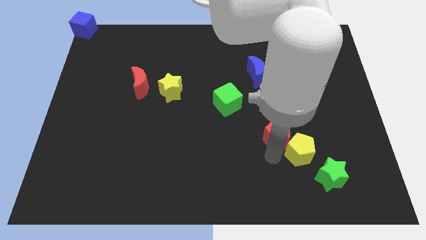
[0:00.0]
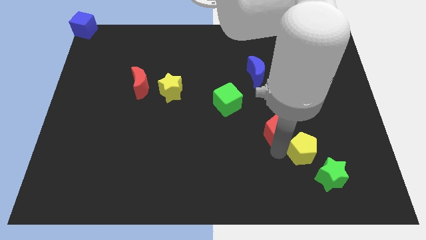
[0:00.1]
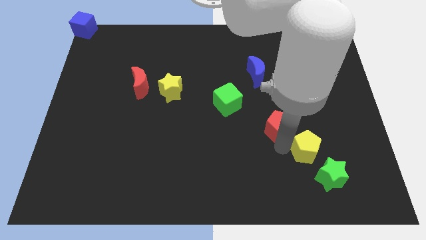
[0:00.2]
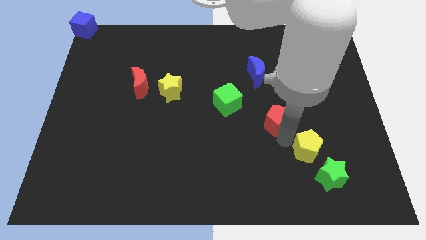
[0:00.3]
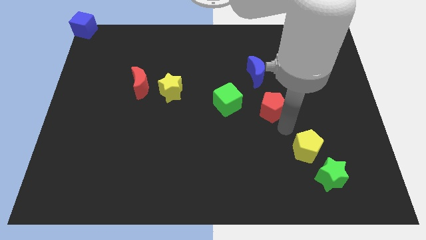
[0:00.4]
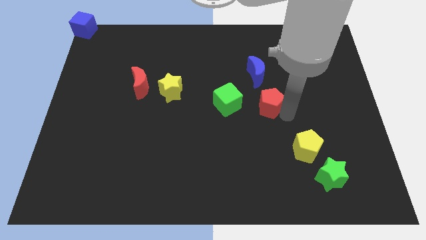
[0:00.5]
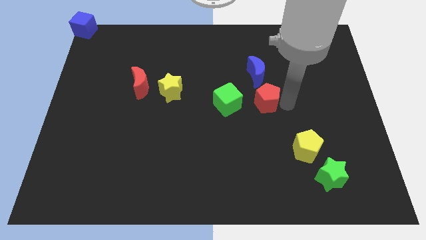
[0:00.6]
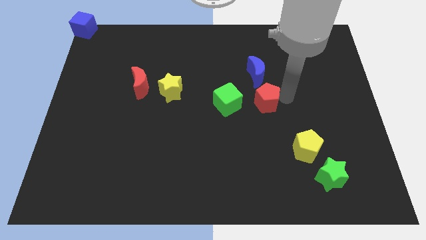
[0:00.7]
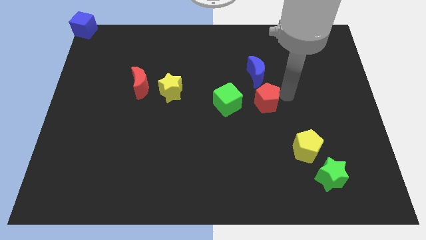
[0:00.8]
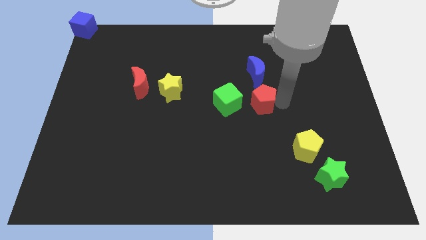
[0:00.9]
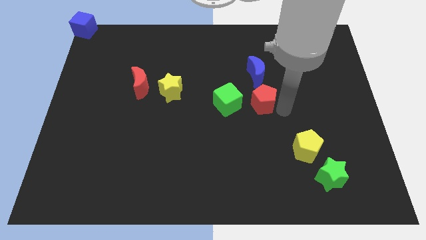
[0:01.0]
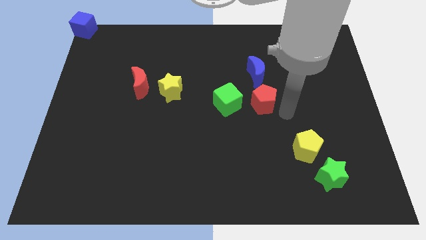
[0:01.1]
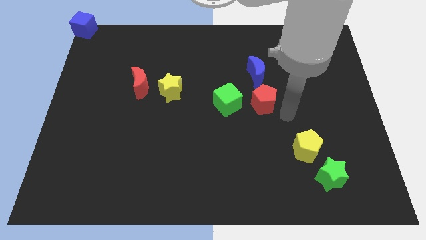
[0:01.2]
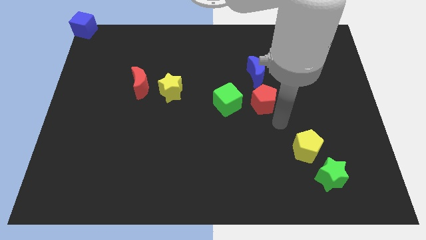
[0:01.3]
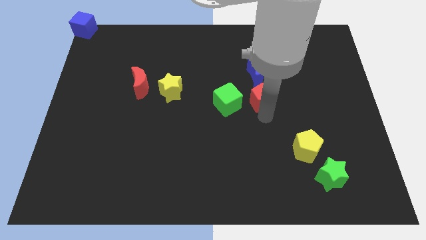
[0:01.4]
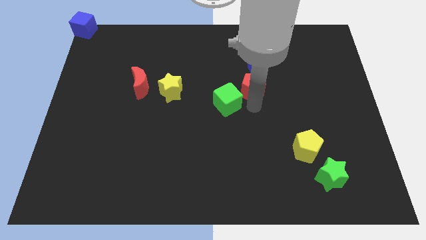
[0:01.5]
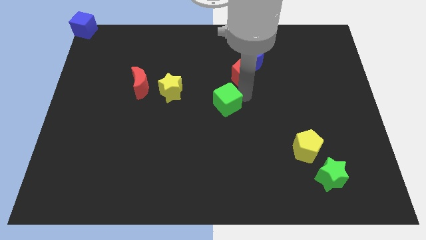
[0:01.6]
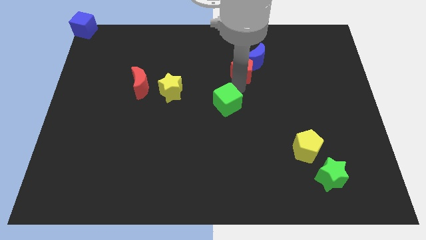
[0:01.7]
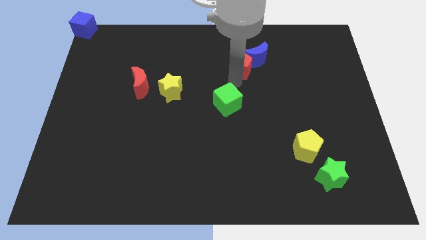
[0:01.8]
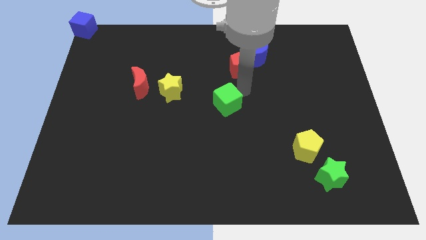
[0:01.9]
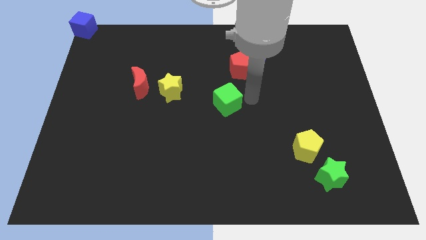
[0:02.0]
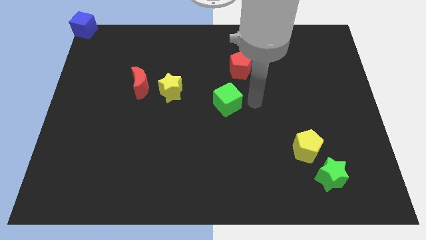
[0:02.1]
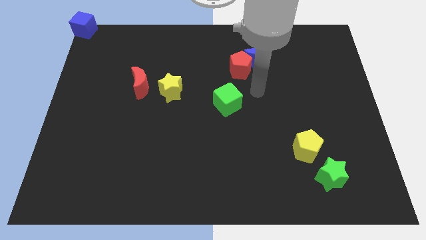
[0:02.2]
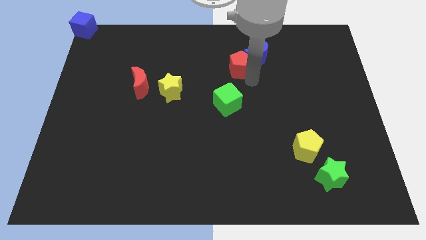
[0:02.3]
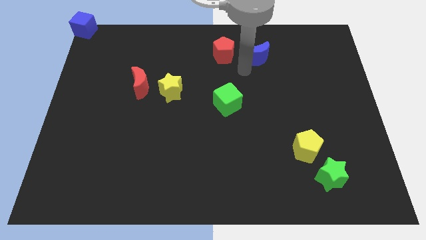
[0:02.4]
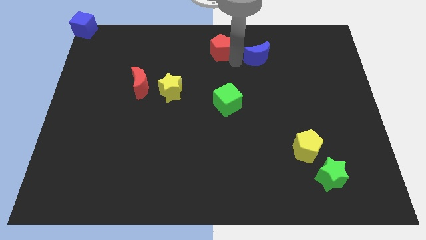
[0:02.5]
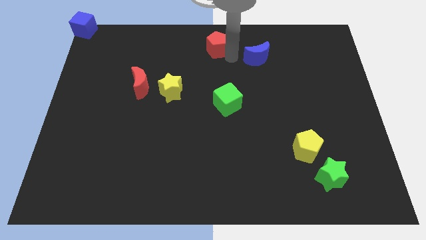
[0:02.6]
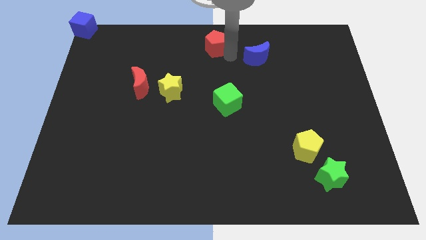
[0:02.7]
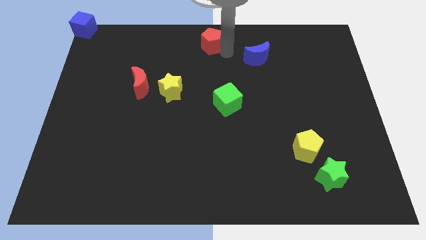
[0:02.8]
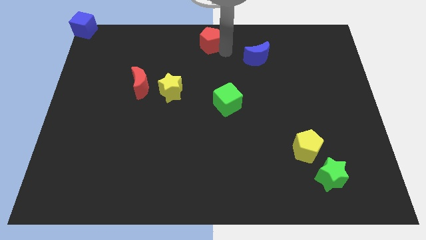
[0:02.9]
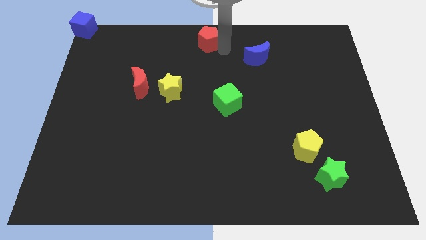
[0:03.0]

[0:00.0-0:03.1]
move the red pentagon to the top center of the board

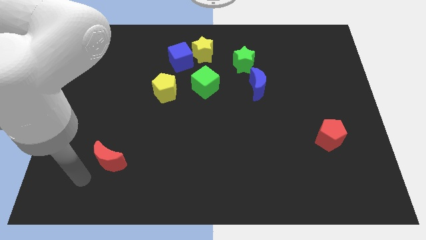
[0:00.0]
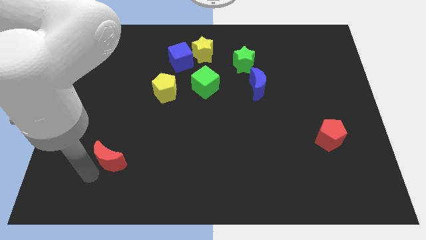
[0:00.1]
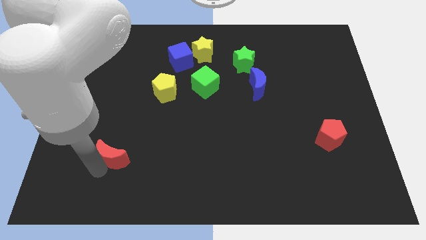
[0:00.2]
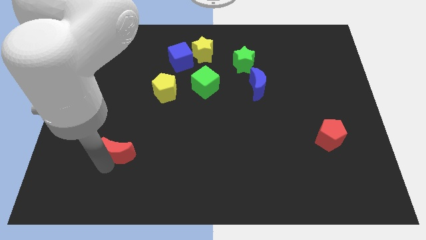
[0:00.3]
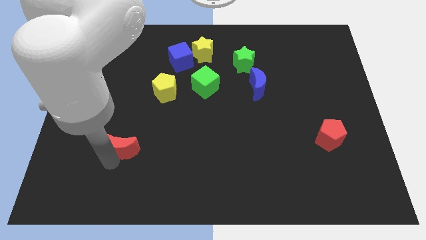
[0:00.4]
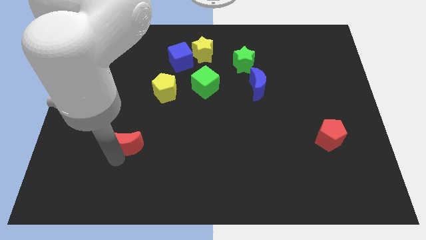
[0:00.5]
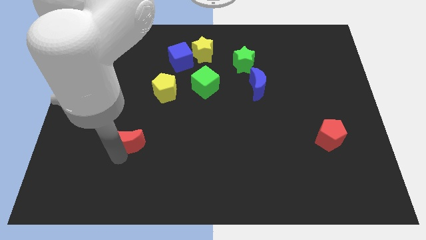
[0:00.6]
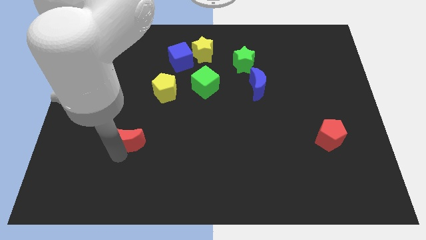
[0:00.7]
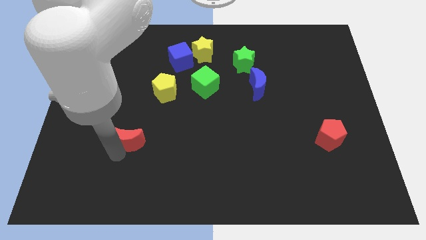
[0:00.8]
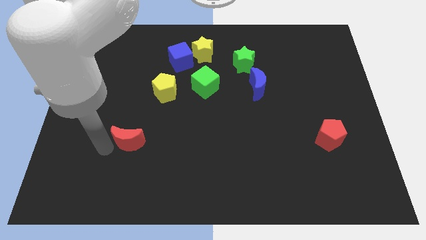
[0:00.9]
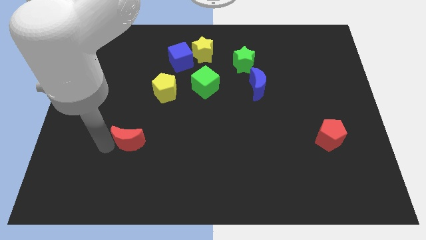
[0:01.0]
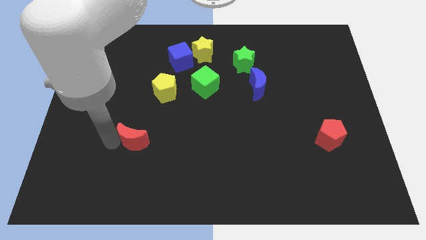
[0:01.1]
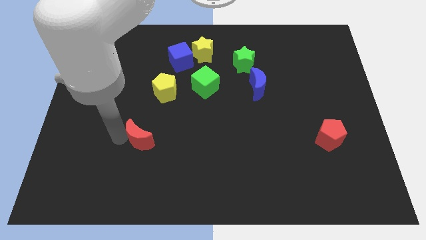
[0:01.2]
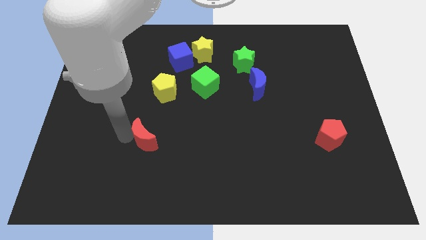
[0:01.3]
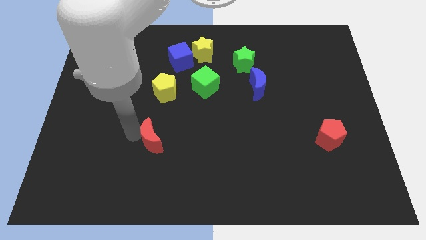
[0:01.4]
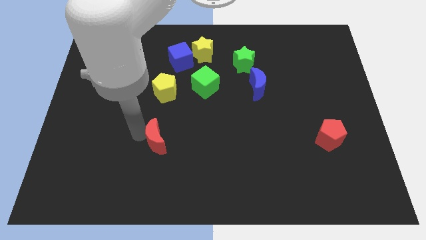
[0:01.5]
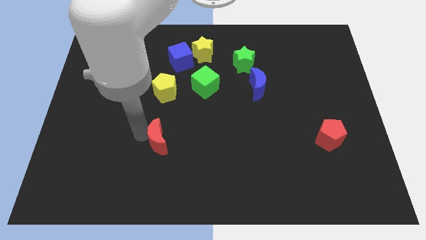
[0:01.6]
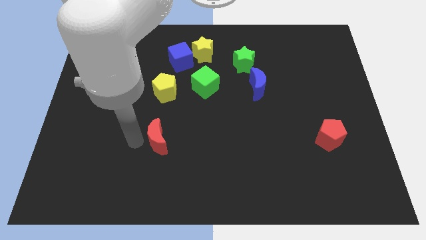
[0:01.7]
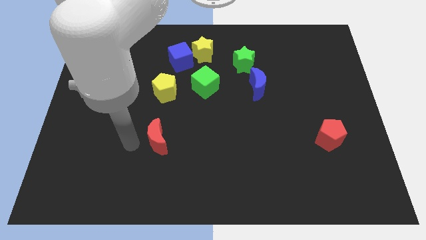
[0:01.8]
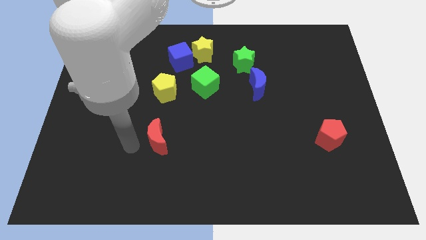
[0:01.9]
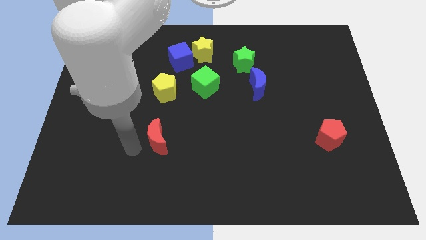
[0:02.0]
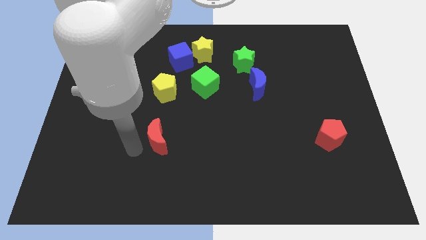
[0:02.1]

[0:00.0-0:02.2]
place red moon to the bottom of yellow pentagon

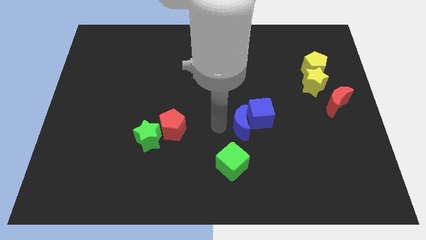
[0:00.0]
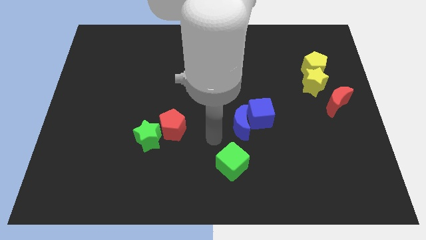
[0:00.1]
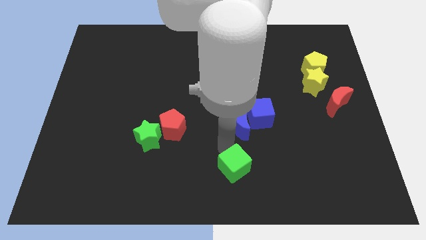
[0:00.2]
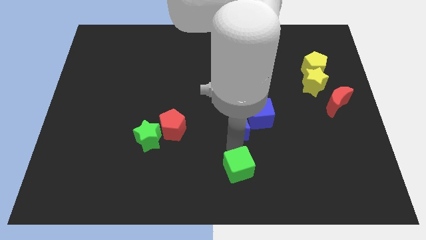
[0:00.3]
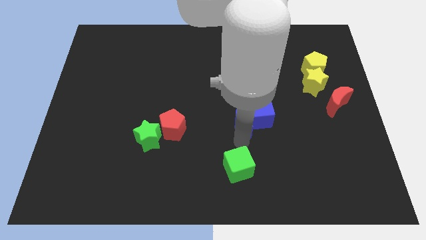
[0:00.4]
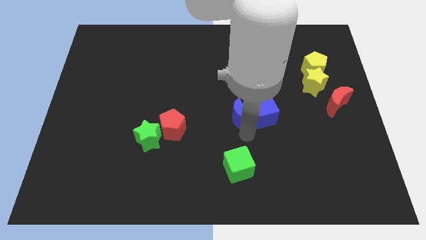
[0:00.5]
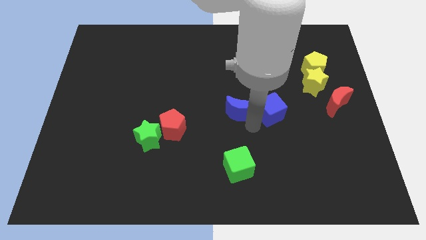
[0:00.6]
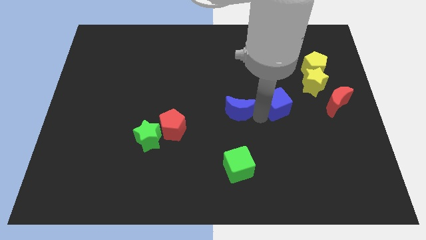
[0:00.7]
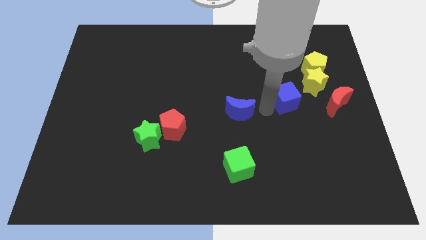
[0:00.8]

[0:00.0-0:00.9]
push the green cube slightly down to the blue moon

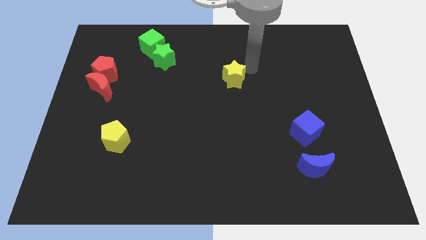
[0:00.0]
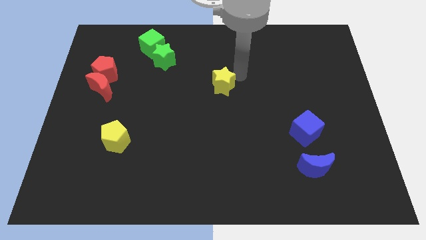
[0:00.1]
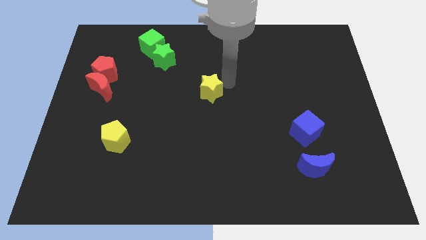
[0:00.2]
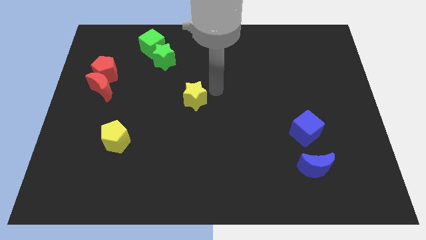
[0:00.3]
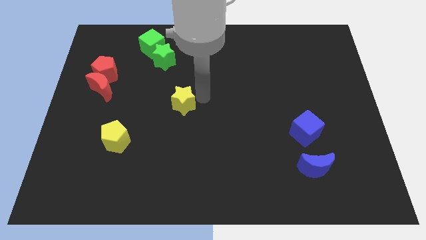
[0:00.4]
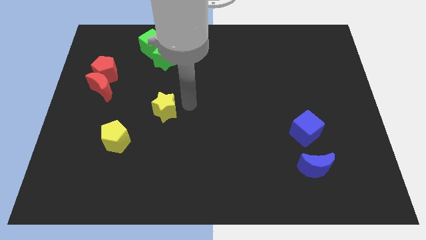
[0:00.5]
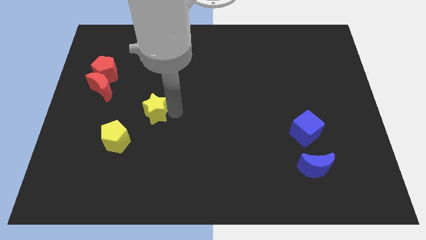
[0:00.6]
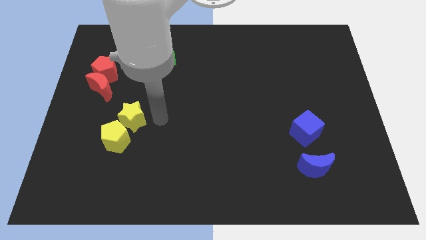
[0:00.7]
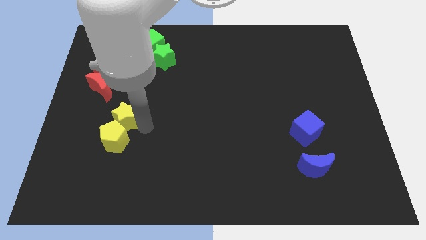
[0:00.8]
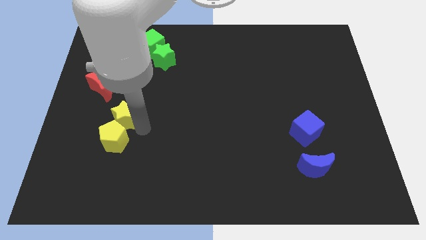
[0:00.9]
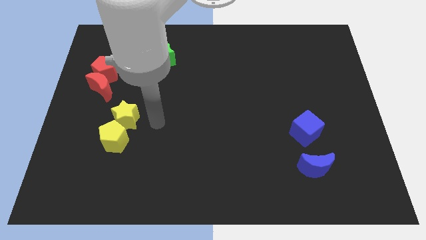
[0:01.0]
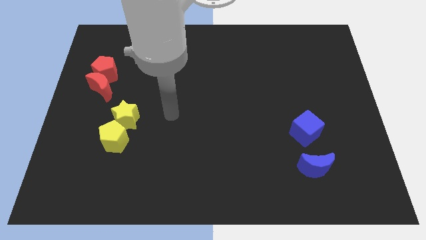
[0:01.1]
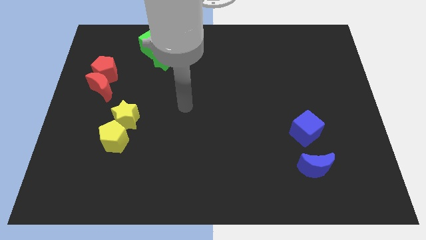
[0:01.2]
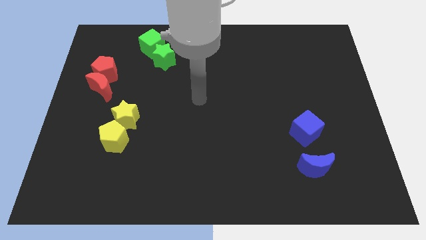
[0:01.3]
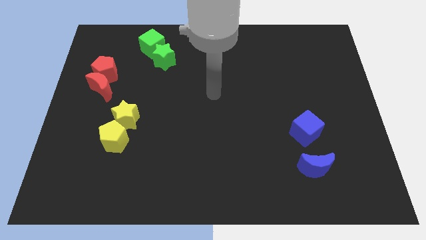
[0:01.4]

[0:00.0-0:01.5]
place the yellow star above the yellow pentagon

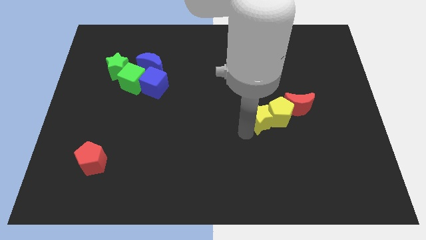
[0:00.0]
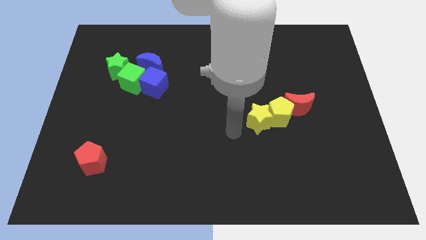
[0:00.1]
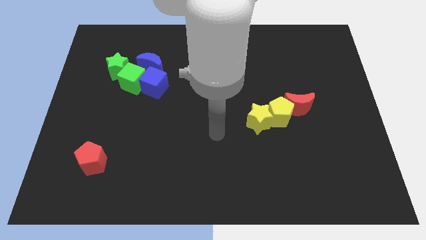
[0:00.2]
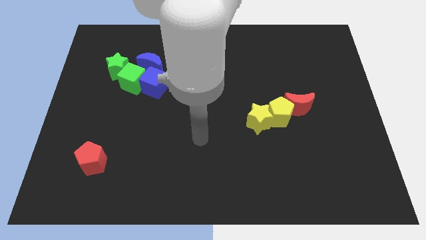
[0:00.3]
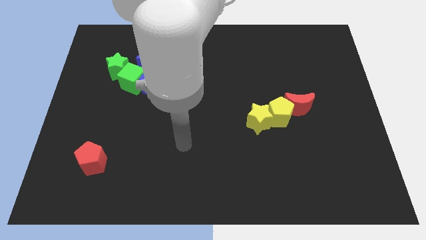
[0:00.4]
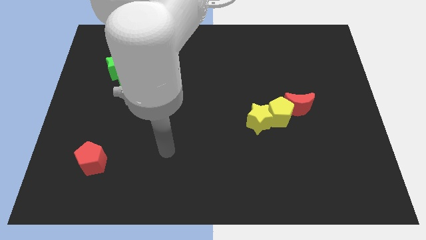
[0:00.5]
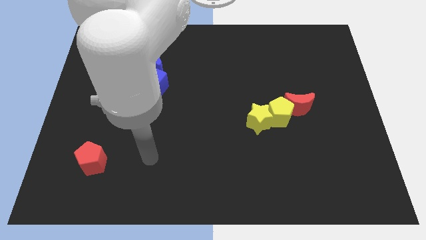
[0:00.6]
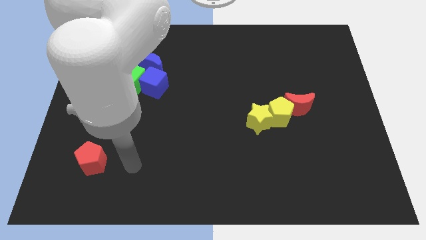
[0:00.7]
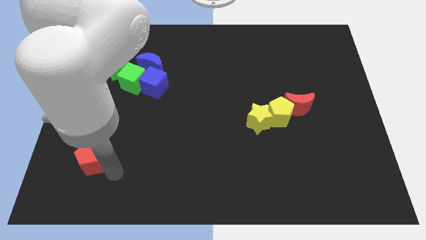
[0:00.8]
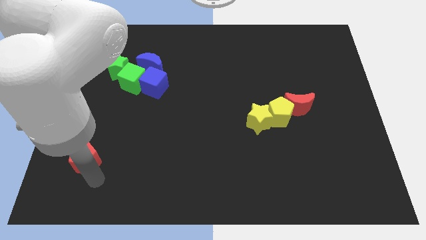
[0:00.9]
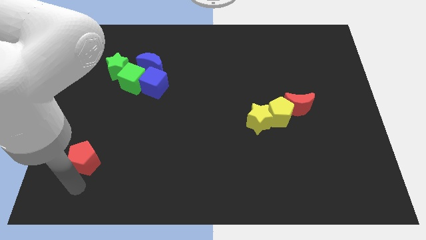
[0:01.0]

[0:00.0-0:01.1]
move the arm away from the yellow star
